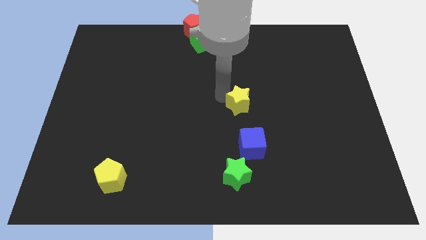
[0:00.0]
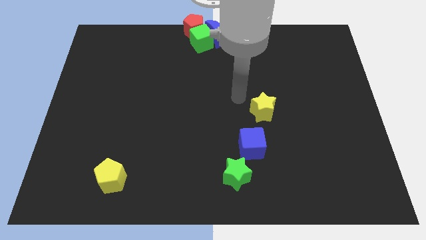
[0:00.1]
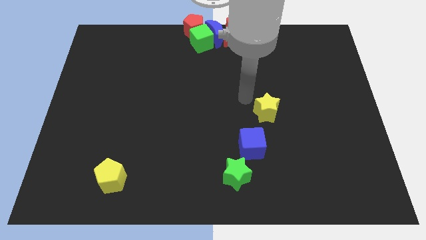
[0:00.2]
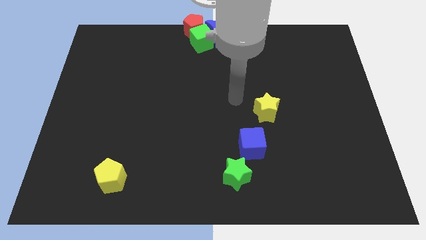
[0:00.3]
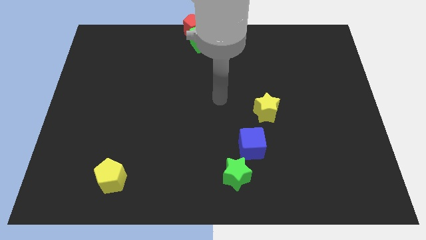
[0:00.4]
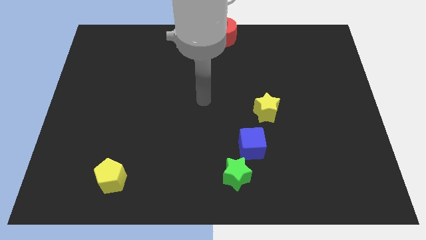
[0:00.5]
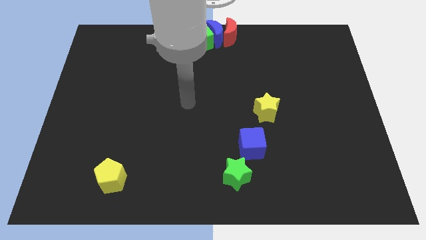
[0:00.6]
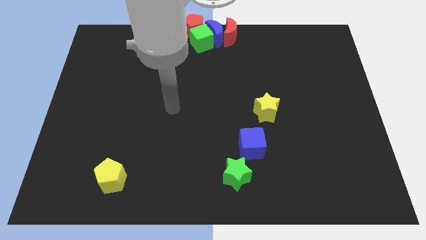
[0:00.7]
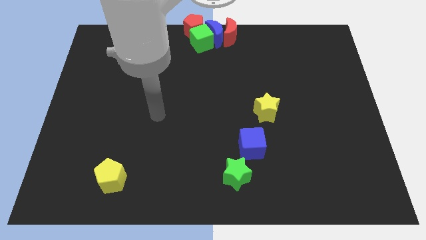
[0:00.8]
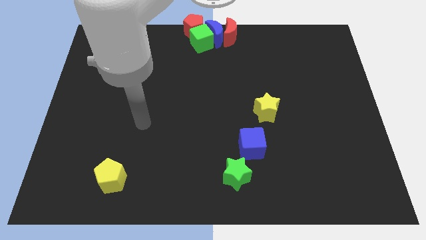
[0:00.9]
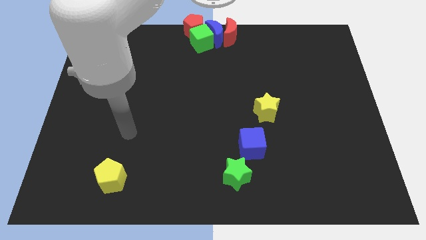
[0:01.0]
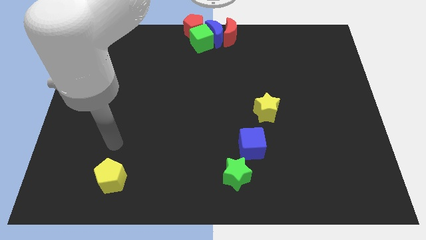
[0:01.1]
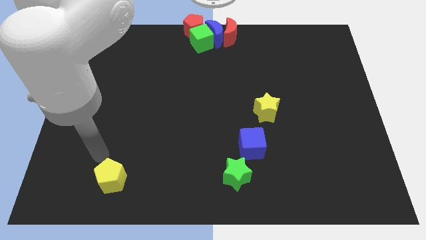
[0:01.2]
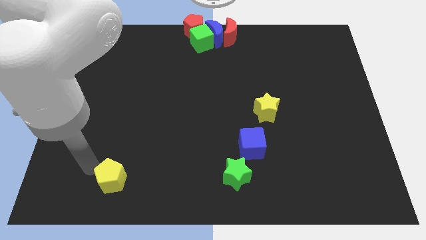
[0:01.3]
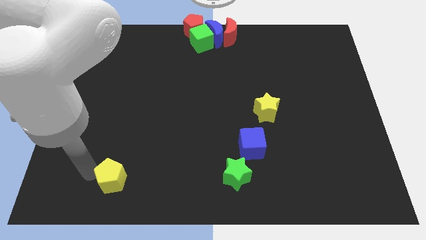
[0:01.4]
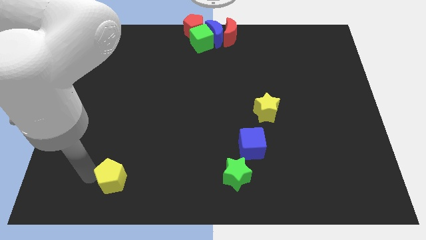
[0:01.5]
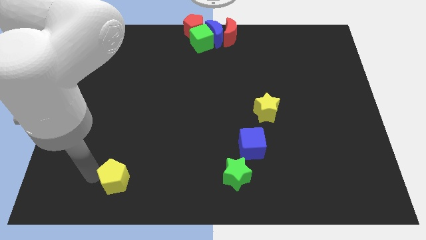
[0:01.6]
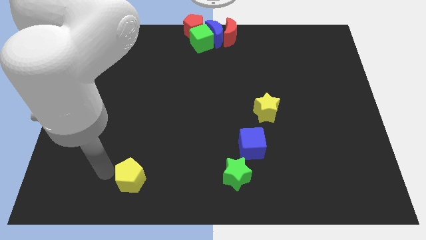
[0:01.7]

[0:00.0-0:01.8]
push the yellow star on the top right of the blue cube

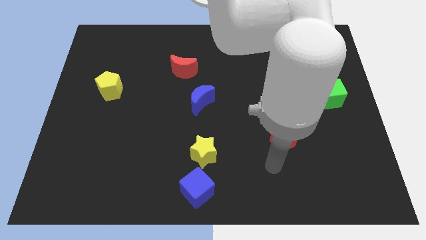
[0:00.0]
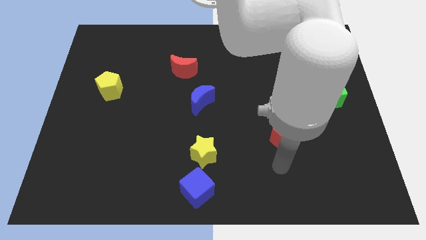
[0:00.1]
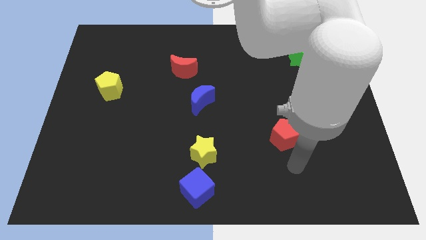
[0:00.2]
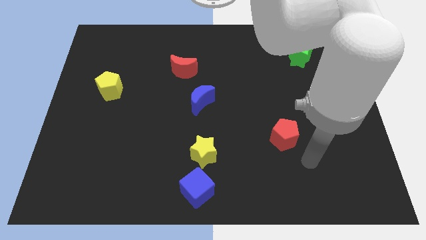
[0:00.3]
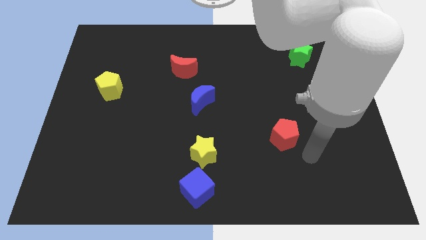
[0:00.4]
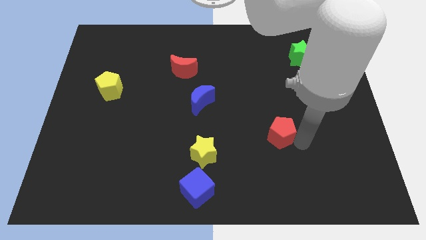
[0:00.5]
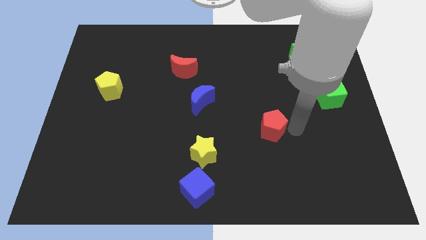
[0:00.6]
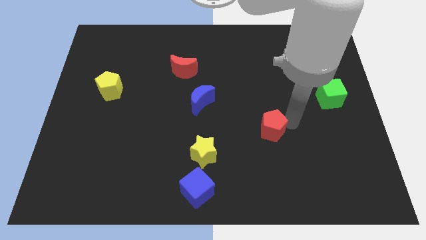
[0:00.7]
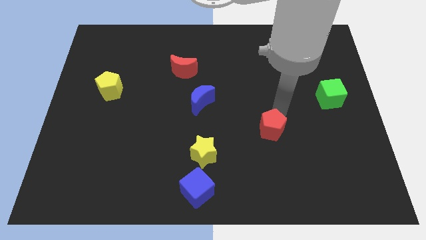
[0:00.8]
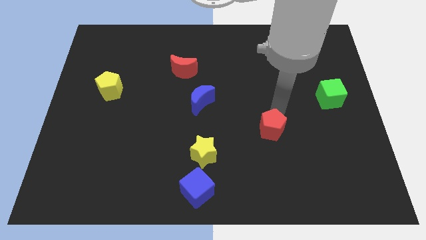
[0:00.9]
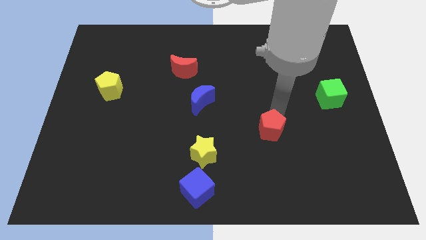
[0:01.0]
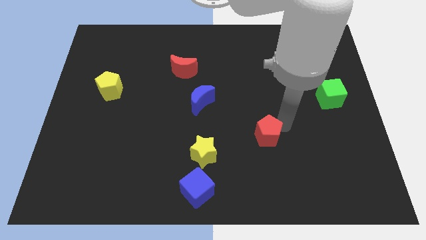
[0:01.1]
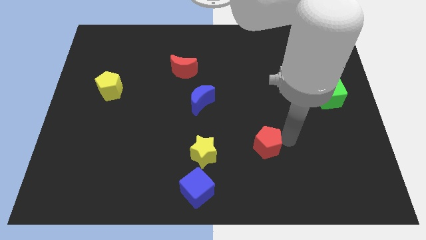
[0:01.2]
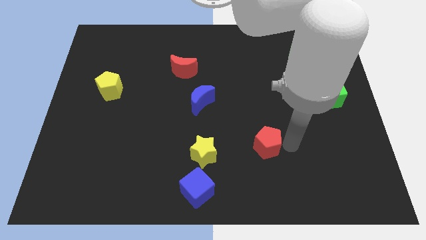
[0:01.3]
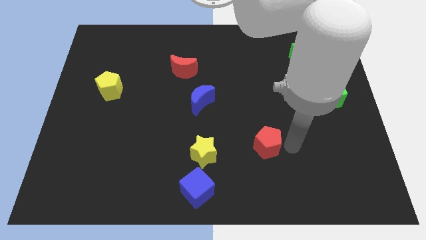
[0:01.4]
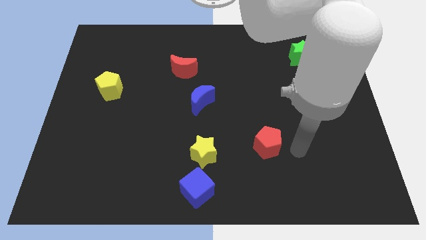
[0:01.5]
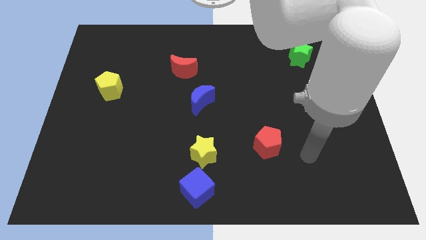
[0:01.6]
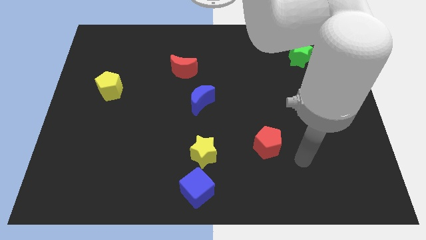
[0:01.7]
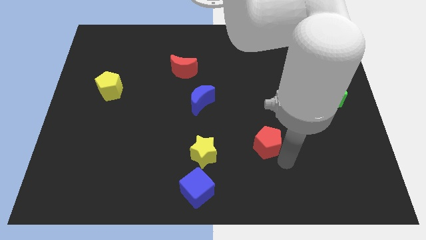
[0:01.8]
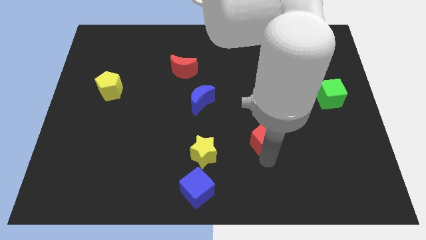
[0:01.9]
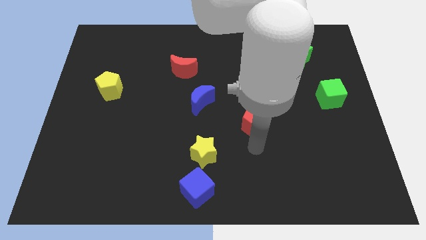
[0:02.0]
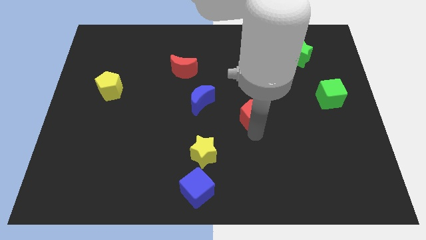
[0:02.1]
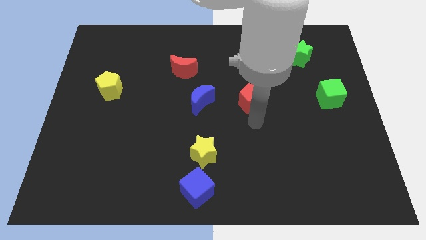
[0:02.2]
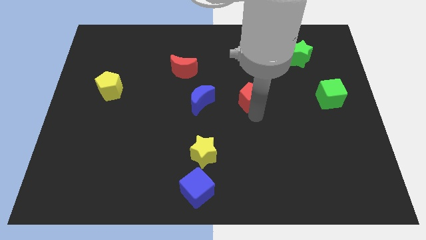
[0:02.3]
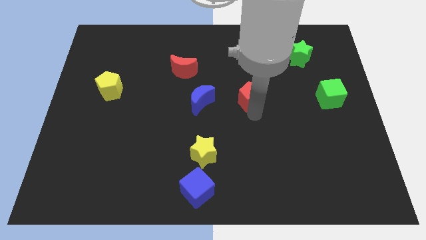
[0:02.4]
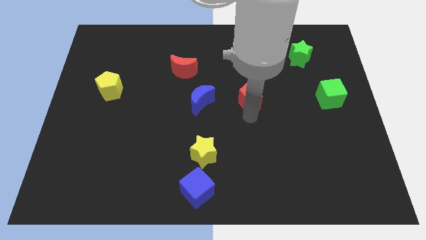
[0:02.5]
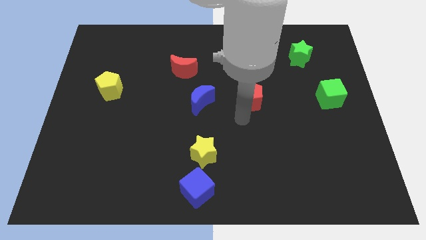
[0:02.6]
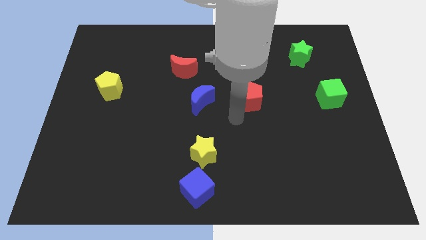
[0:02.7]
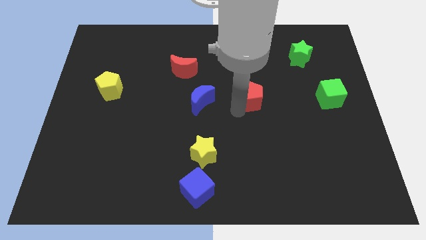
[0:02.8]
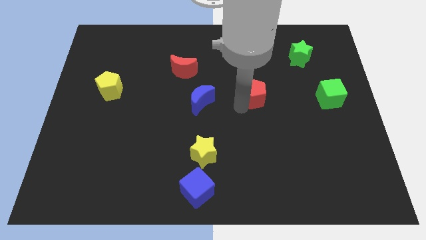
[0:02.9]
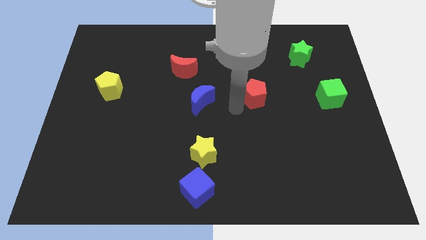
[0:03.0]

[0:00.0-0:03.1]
place the red pentagon parallel to the blue moon

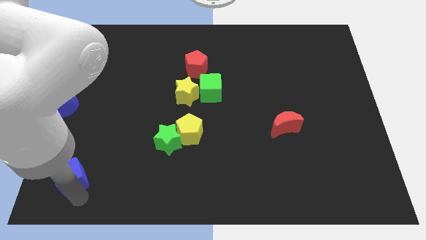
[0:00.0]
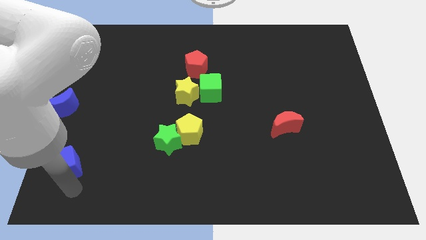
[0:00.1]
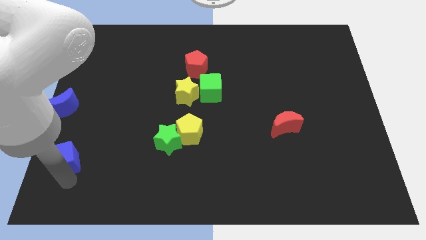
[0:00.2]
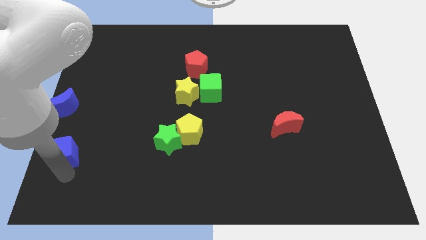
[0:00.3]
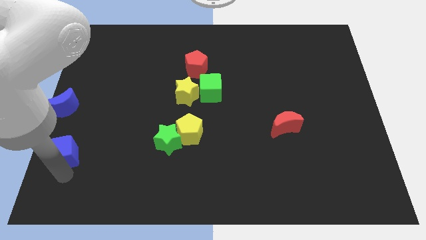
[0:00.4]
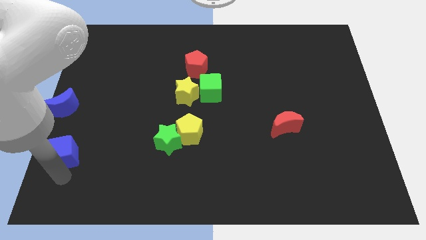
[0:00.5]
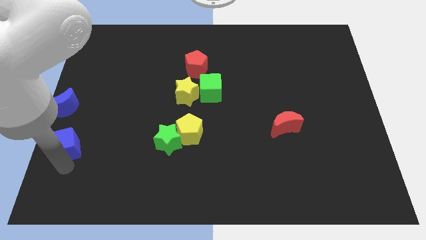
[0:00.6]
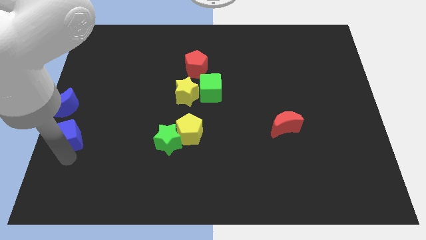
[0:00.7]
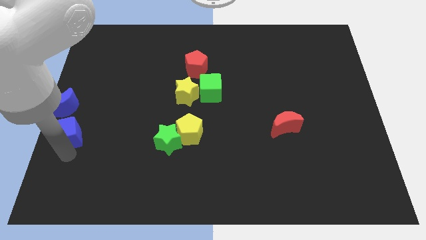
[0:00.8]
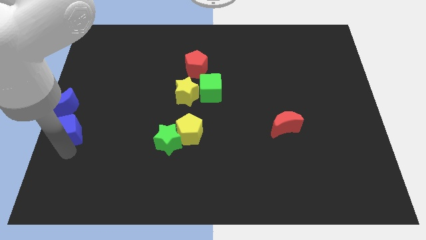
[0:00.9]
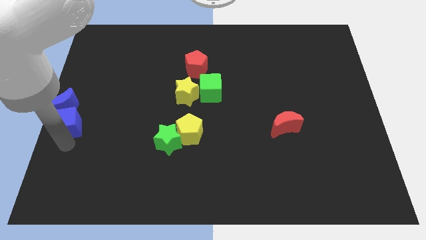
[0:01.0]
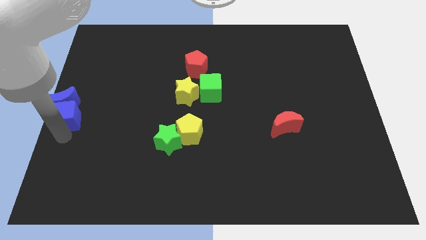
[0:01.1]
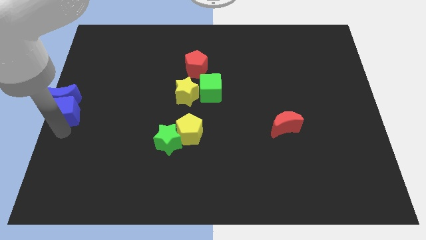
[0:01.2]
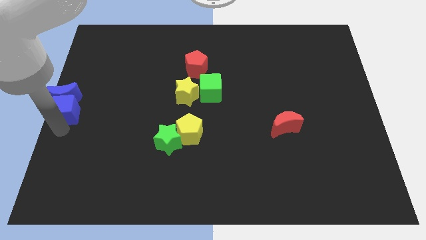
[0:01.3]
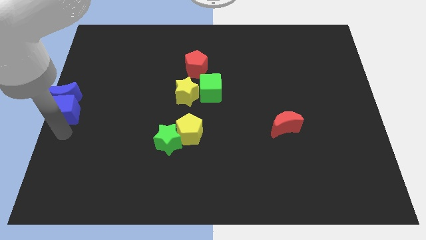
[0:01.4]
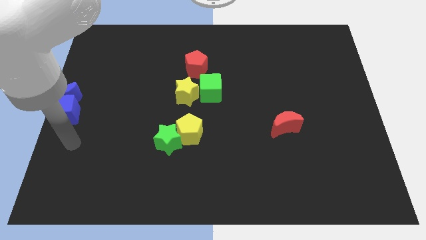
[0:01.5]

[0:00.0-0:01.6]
move the blue cube into the bottom side of the blue crescent

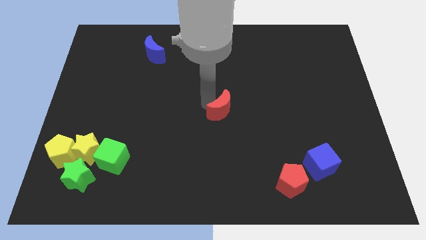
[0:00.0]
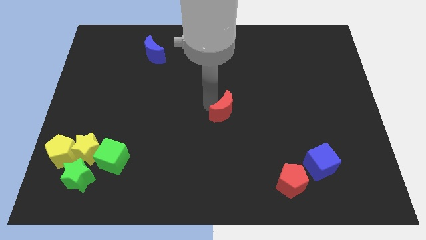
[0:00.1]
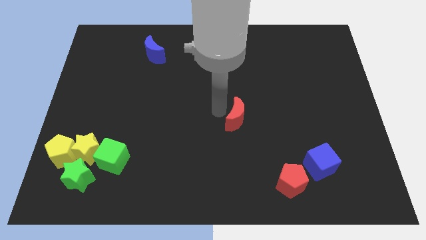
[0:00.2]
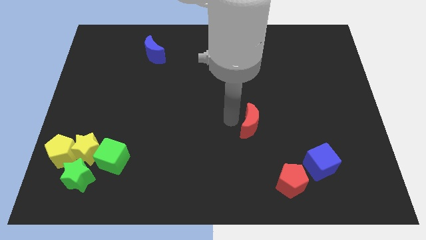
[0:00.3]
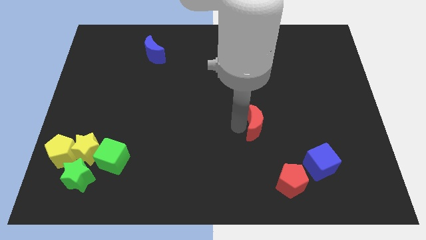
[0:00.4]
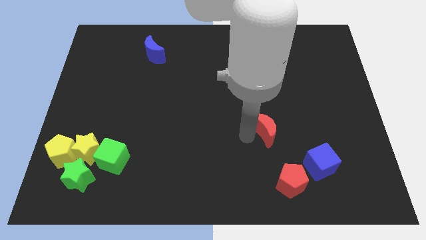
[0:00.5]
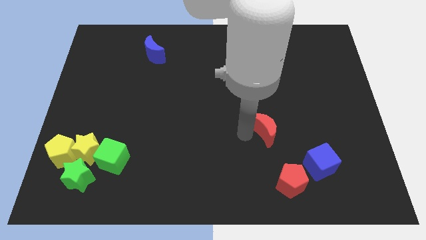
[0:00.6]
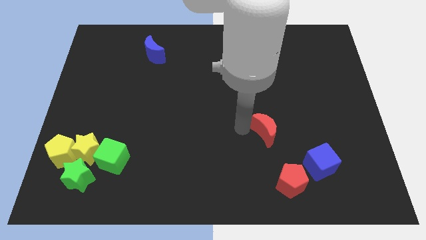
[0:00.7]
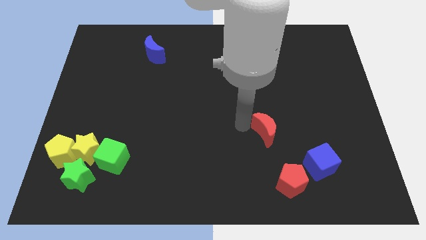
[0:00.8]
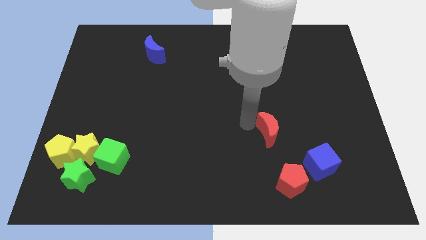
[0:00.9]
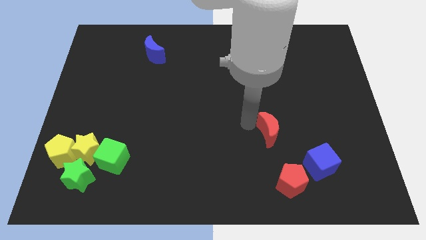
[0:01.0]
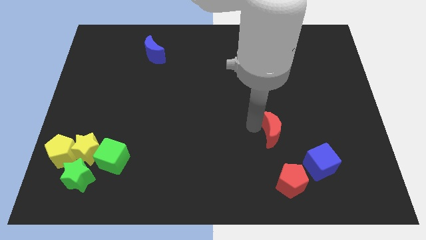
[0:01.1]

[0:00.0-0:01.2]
push the red crescent towards the bottom right of the board

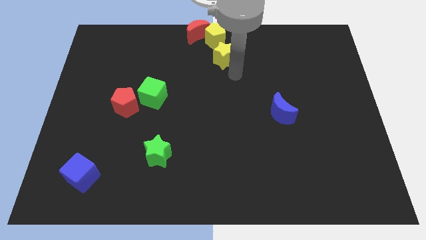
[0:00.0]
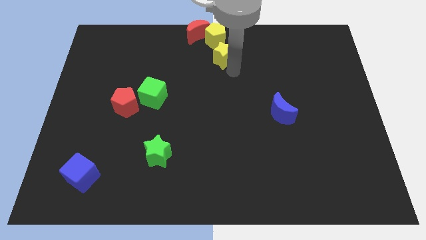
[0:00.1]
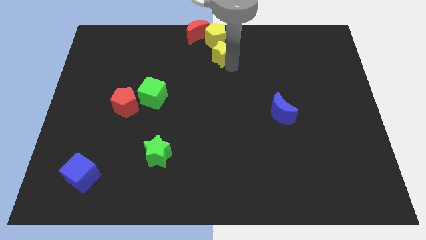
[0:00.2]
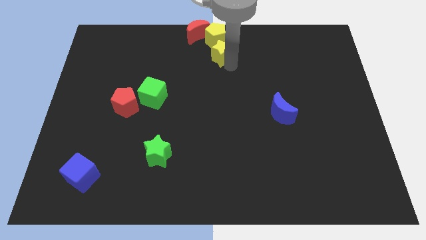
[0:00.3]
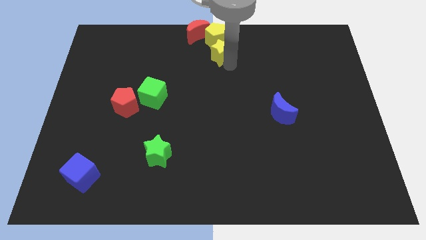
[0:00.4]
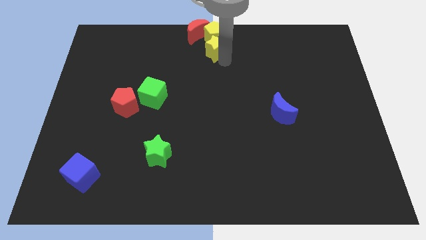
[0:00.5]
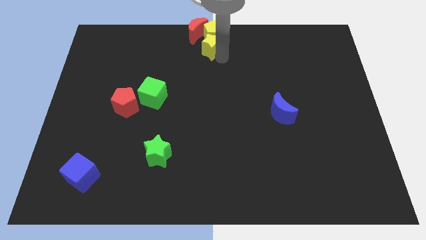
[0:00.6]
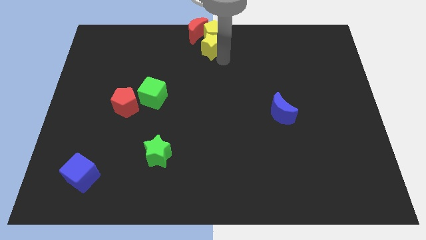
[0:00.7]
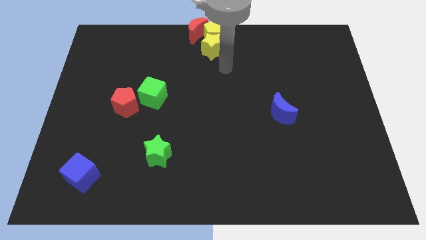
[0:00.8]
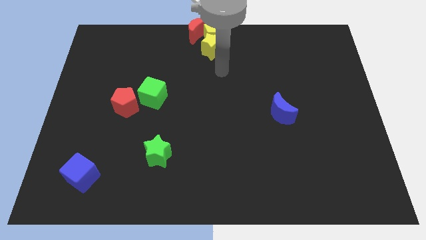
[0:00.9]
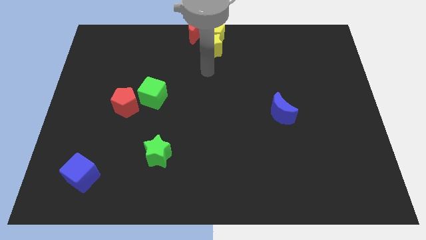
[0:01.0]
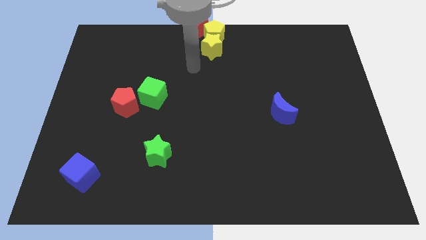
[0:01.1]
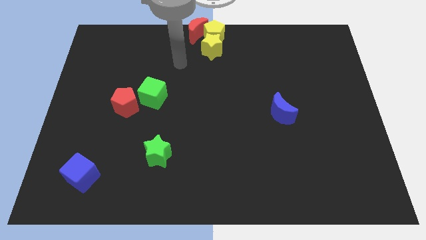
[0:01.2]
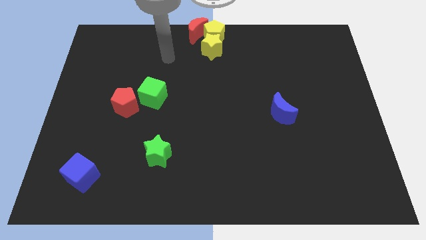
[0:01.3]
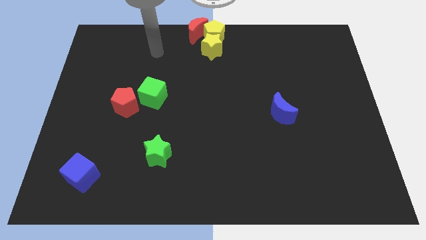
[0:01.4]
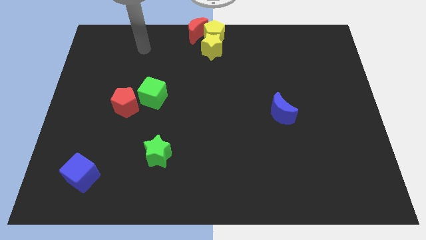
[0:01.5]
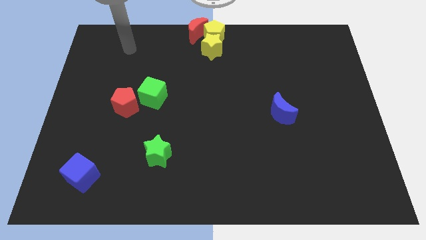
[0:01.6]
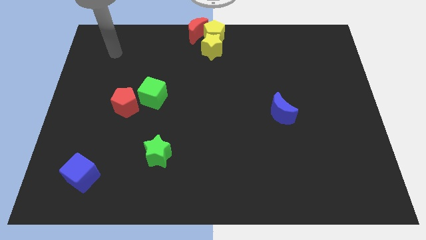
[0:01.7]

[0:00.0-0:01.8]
slightly touch yellow pentagon with yellow star
